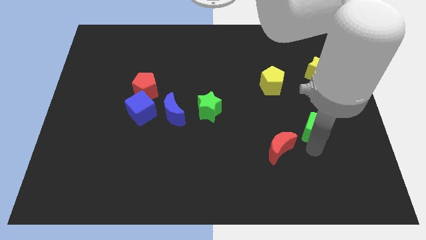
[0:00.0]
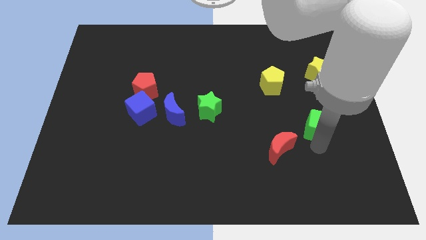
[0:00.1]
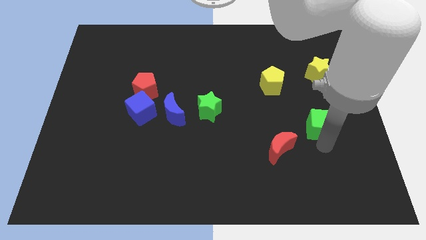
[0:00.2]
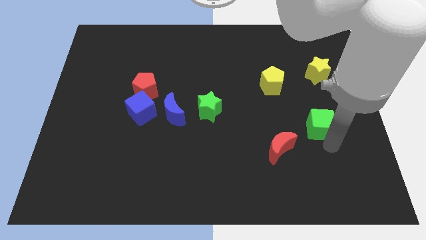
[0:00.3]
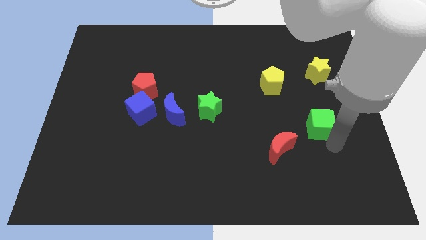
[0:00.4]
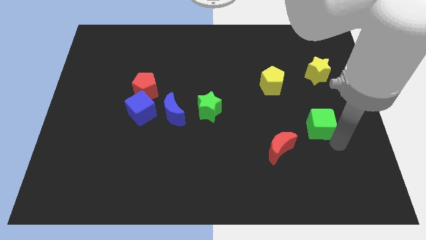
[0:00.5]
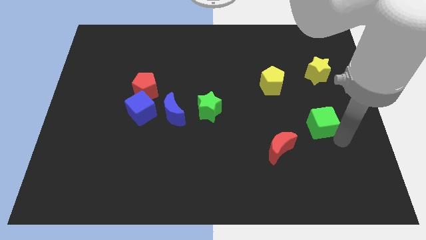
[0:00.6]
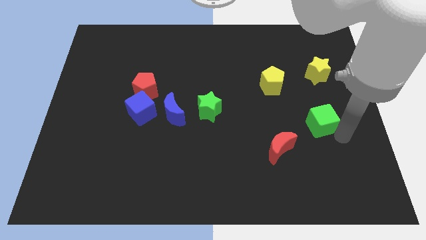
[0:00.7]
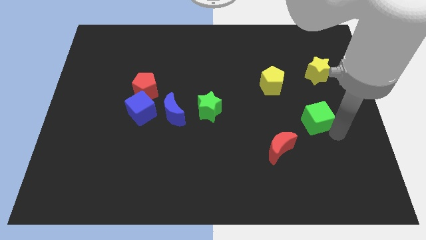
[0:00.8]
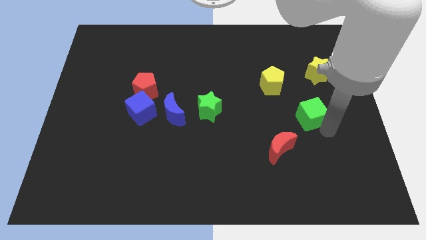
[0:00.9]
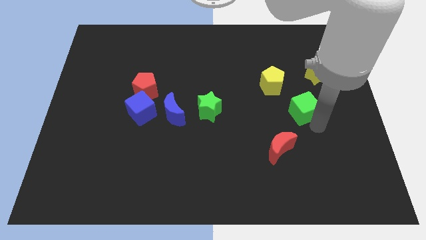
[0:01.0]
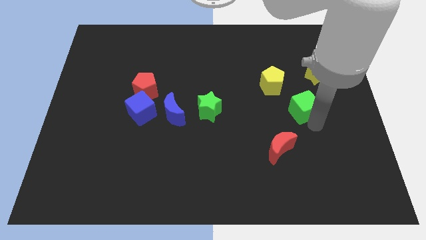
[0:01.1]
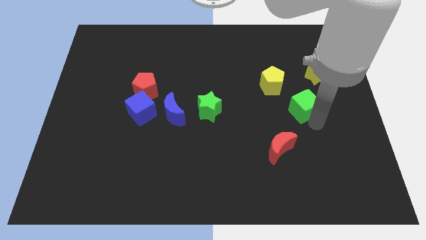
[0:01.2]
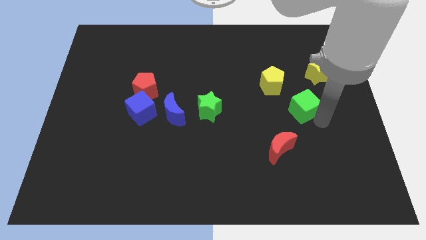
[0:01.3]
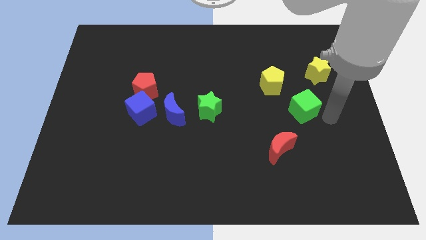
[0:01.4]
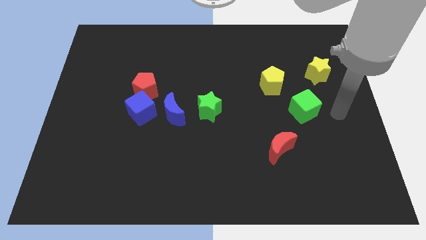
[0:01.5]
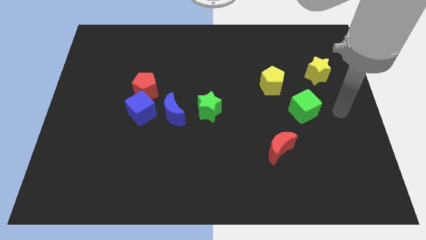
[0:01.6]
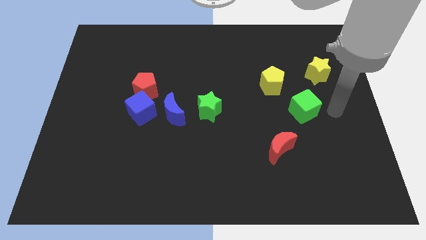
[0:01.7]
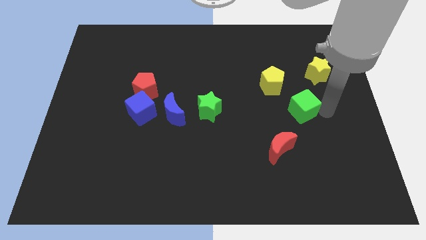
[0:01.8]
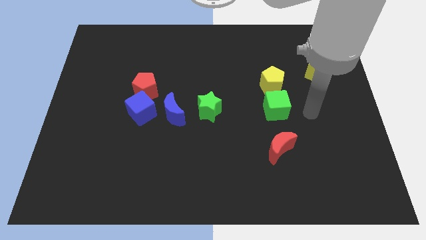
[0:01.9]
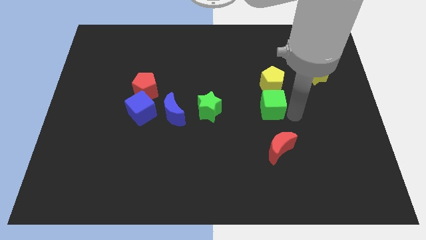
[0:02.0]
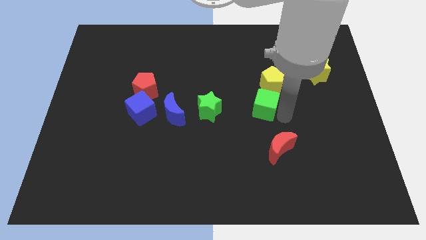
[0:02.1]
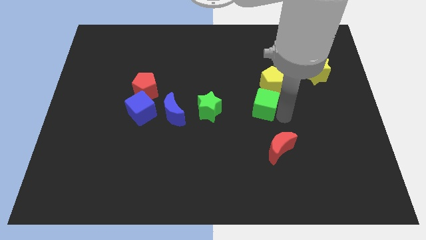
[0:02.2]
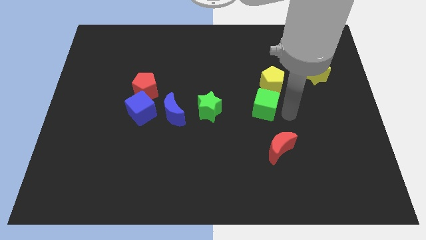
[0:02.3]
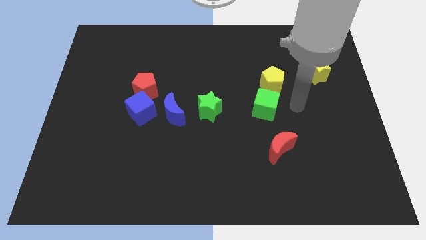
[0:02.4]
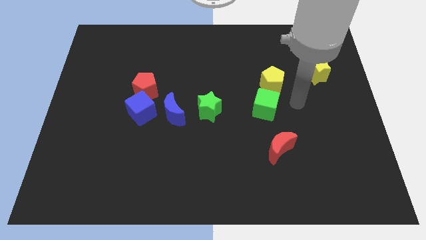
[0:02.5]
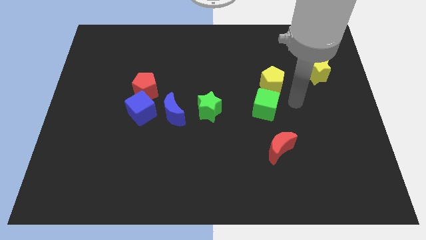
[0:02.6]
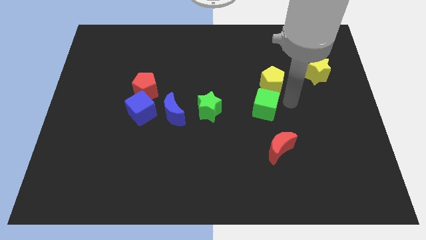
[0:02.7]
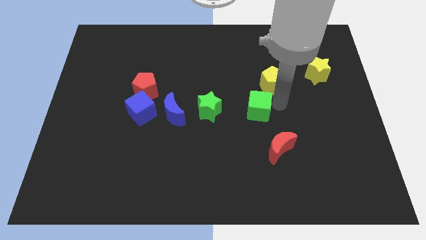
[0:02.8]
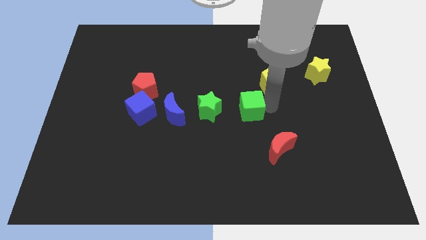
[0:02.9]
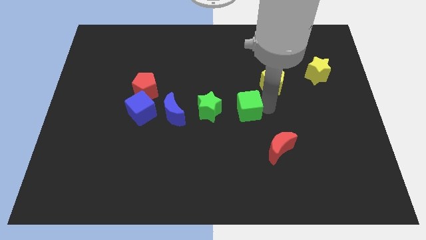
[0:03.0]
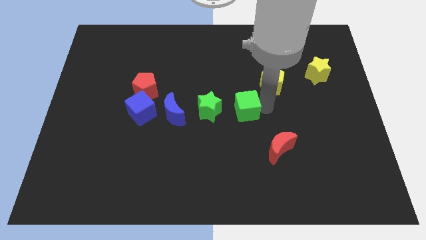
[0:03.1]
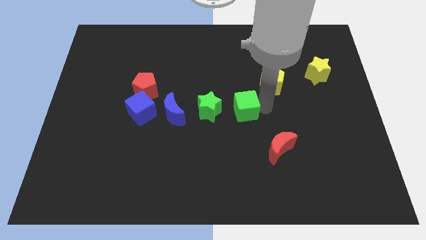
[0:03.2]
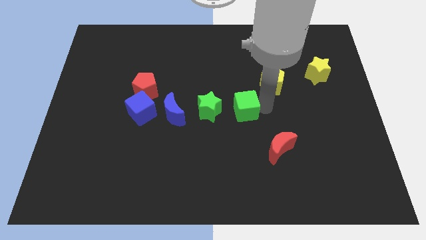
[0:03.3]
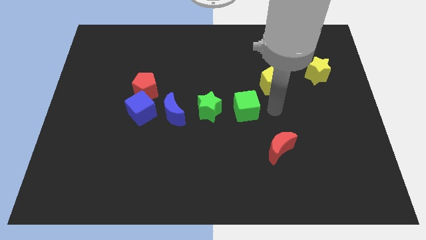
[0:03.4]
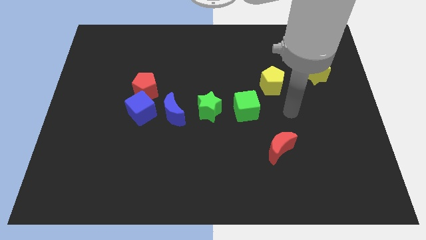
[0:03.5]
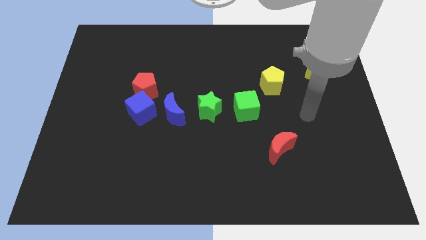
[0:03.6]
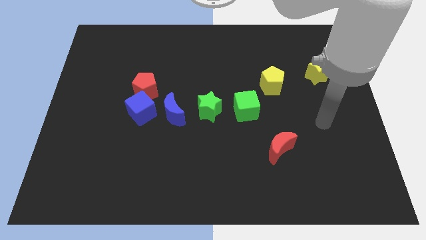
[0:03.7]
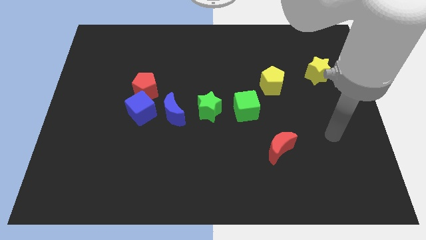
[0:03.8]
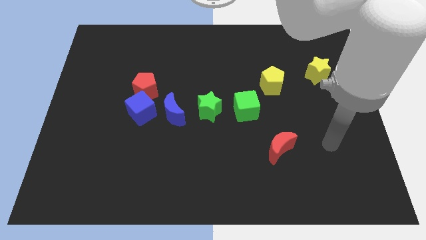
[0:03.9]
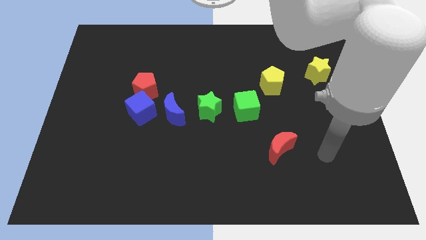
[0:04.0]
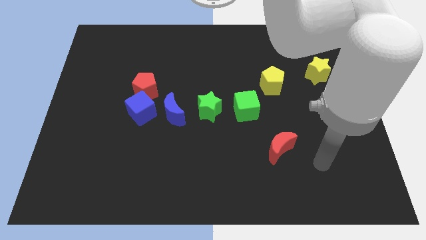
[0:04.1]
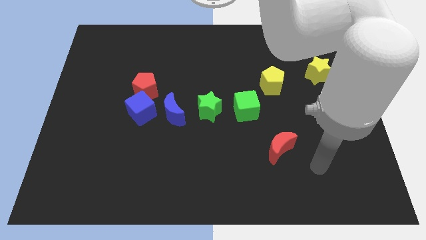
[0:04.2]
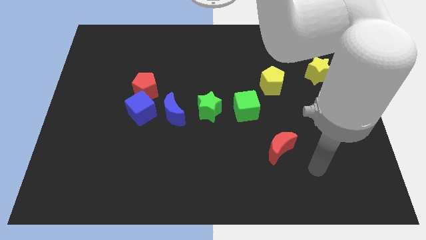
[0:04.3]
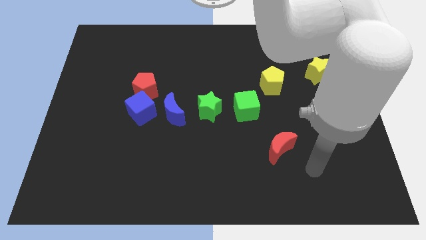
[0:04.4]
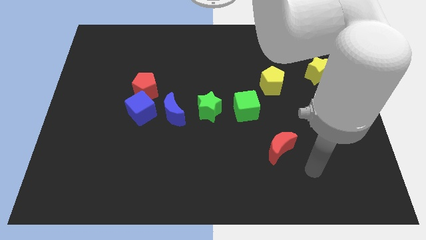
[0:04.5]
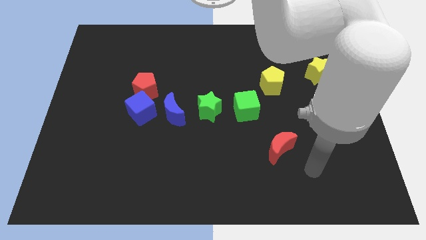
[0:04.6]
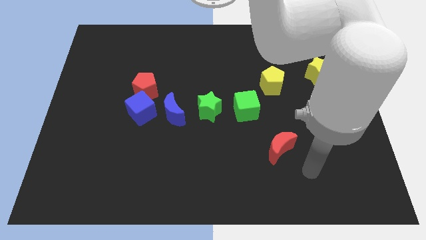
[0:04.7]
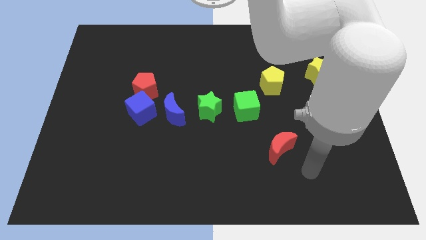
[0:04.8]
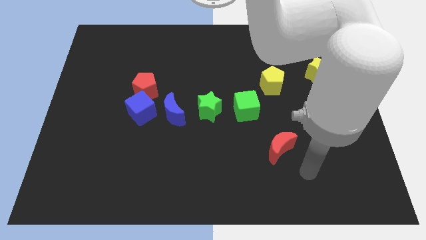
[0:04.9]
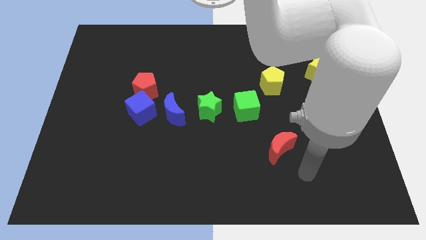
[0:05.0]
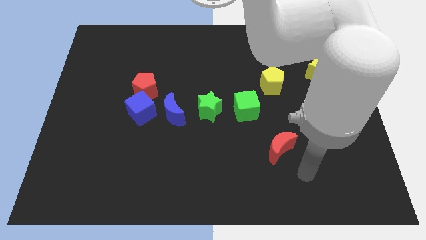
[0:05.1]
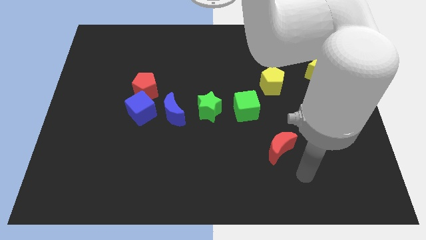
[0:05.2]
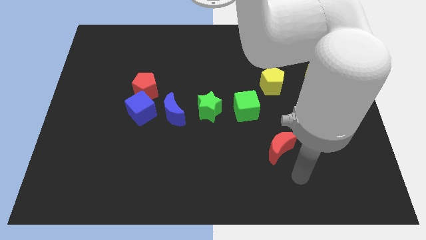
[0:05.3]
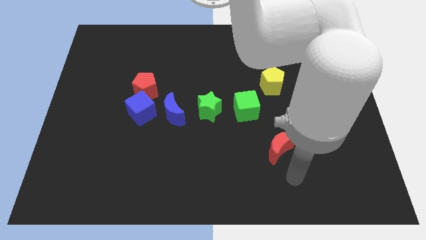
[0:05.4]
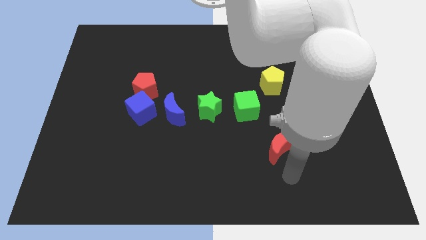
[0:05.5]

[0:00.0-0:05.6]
move the green cube slightly left

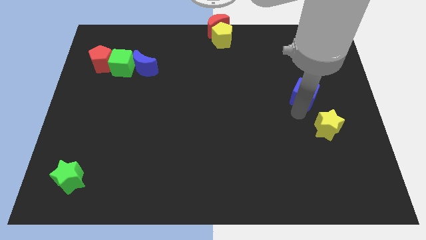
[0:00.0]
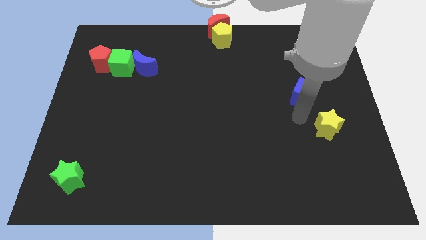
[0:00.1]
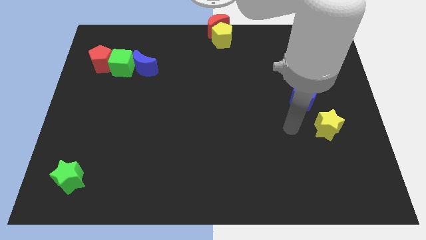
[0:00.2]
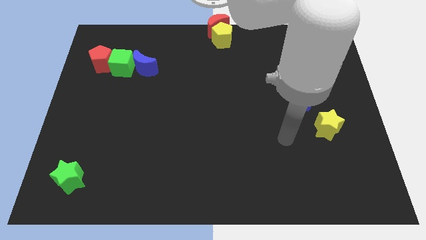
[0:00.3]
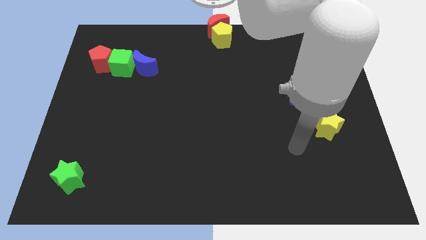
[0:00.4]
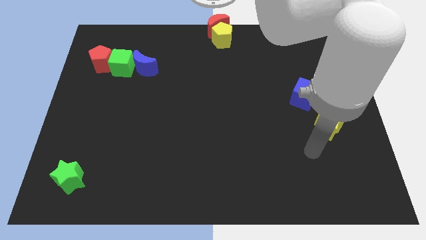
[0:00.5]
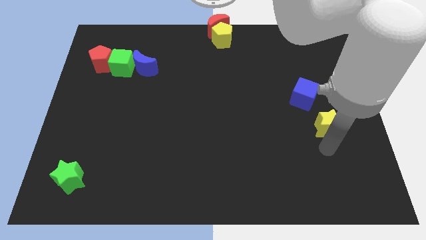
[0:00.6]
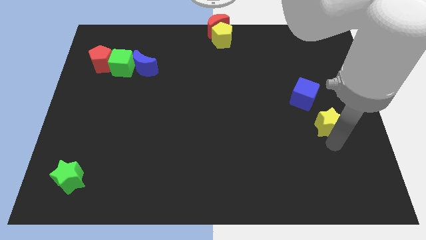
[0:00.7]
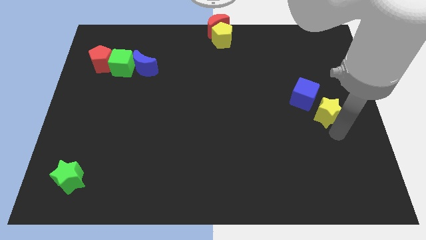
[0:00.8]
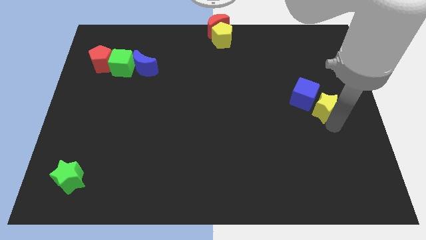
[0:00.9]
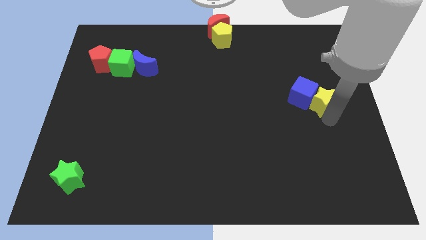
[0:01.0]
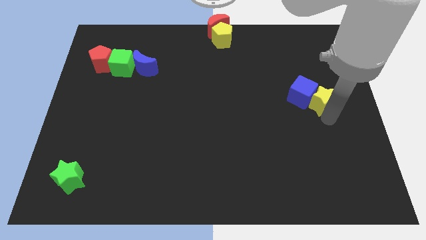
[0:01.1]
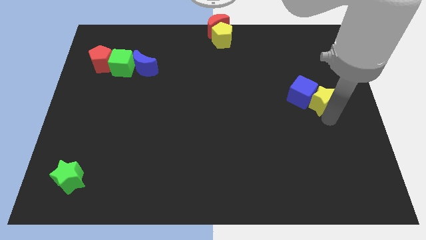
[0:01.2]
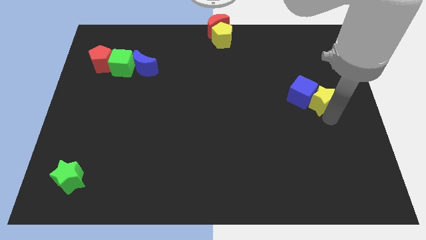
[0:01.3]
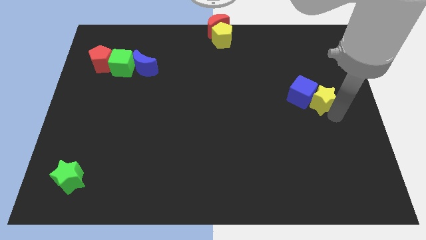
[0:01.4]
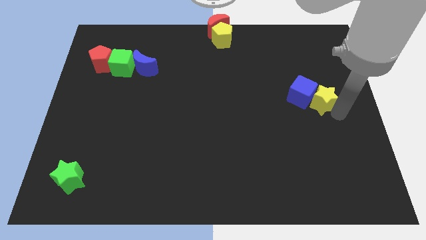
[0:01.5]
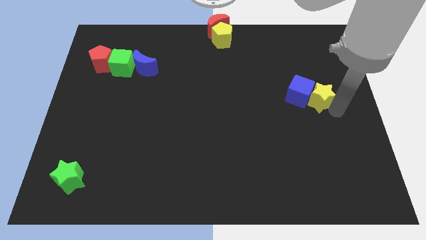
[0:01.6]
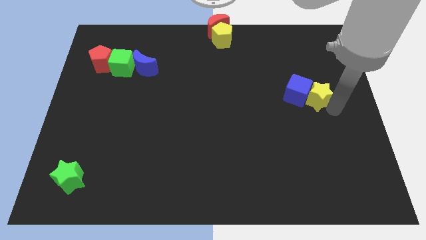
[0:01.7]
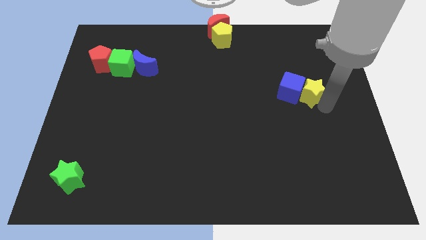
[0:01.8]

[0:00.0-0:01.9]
move yellow star right beside the blue cube

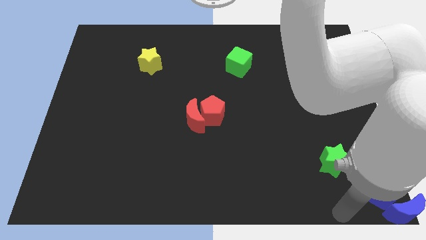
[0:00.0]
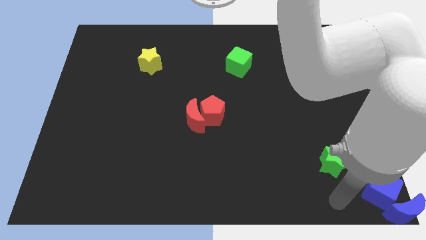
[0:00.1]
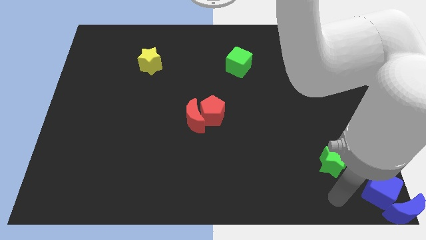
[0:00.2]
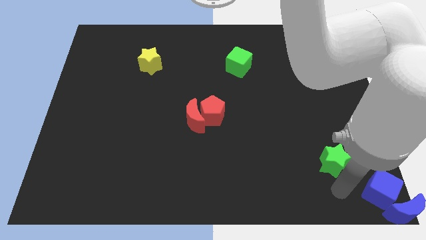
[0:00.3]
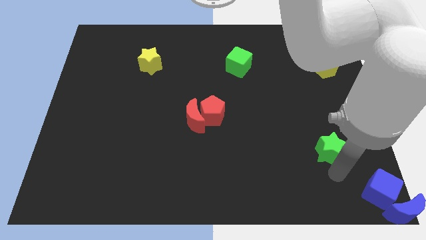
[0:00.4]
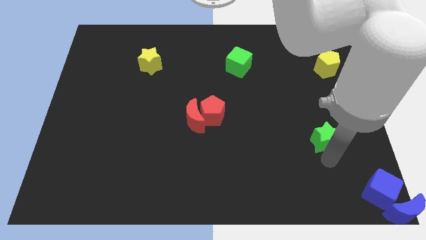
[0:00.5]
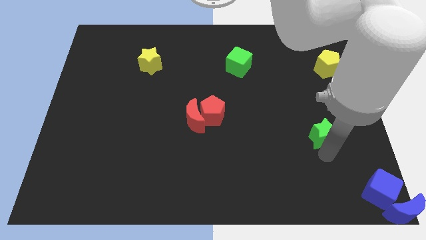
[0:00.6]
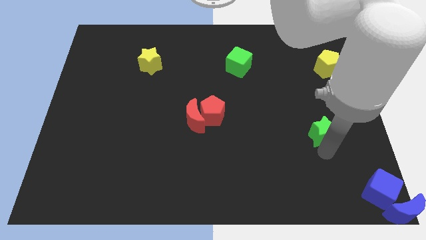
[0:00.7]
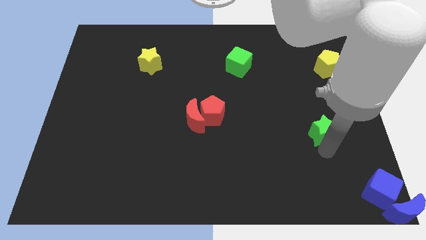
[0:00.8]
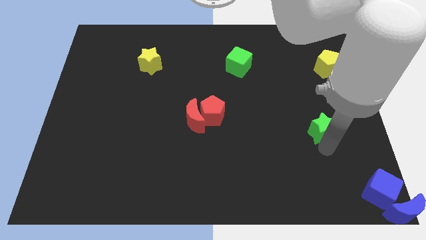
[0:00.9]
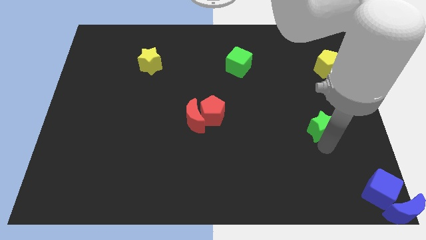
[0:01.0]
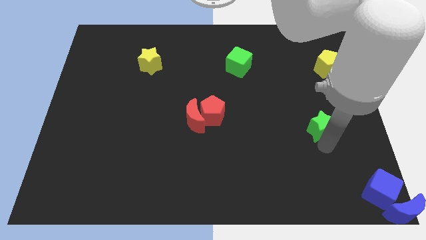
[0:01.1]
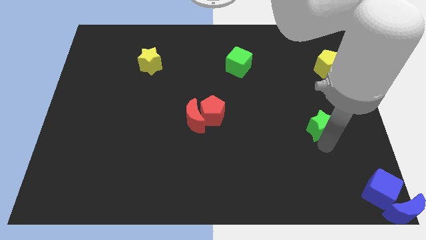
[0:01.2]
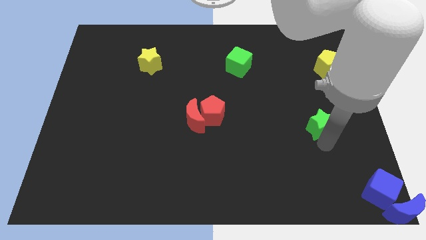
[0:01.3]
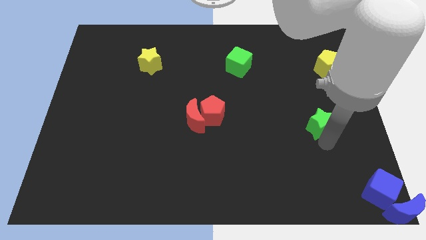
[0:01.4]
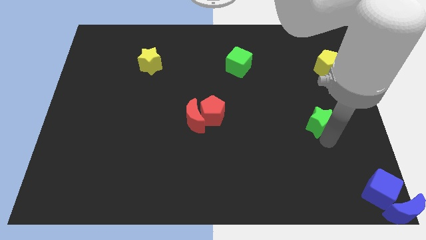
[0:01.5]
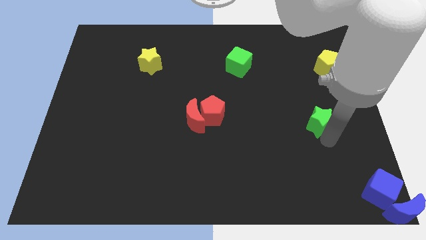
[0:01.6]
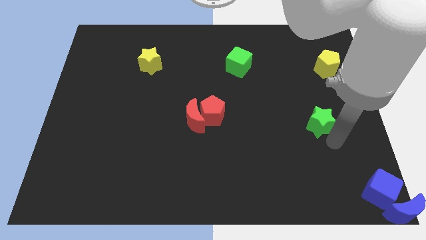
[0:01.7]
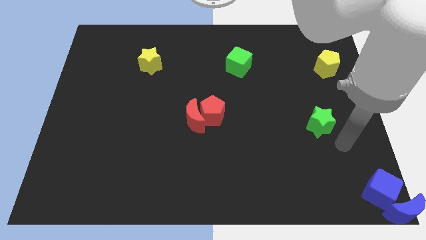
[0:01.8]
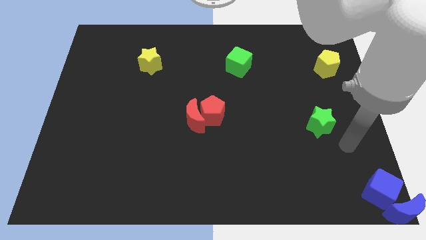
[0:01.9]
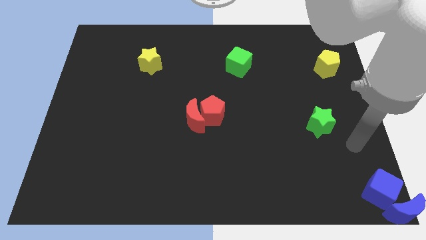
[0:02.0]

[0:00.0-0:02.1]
slide green star up to the right of red pentagon
